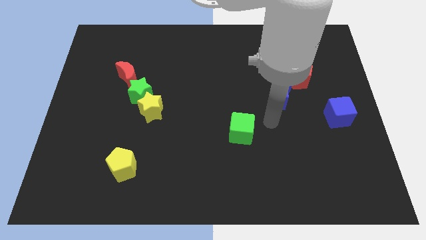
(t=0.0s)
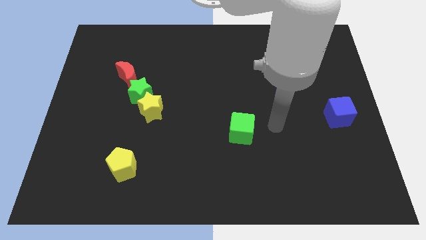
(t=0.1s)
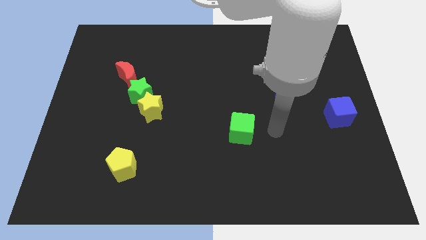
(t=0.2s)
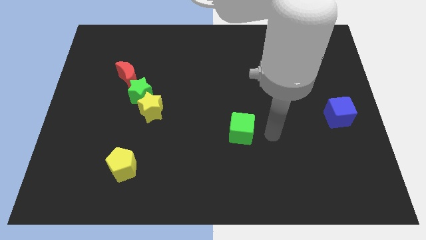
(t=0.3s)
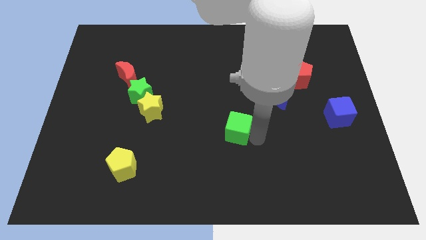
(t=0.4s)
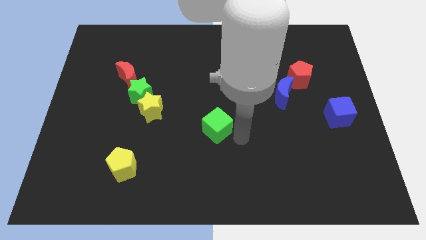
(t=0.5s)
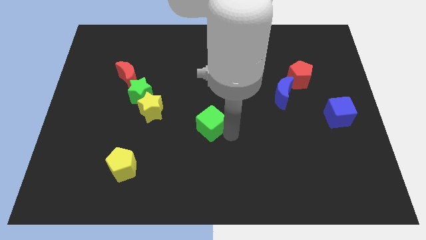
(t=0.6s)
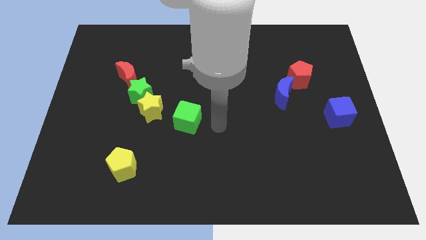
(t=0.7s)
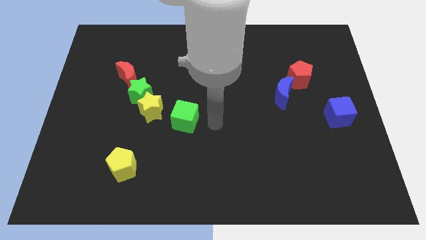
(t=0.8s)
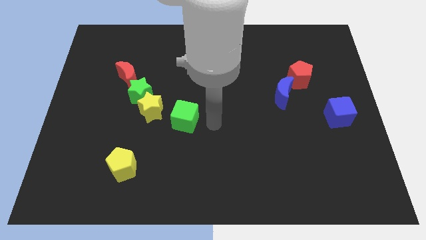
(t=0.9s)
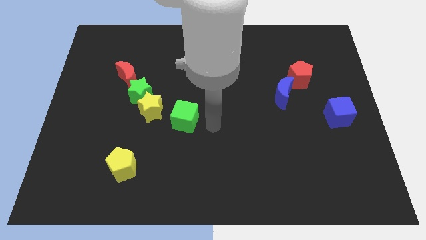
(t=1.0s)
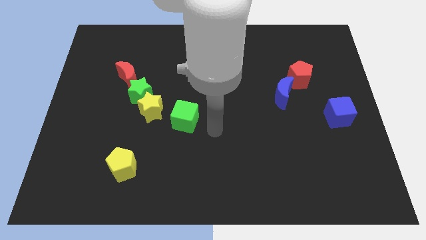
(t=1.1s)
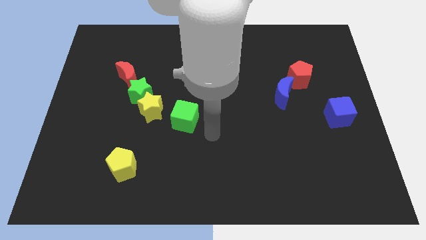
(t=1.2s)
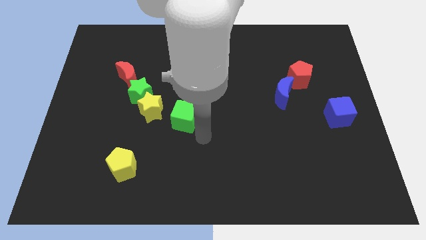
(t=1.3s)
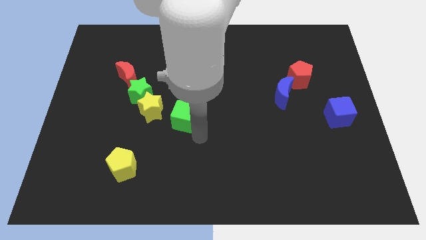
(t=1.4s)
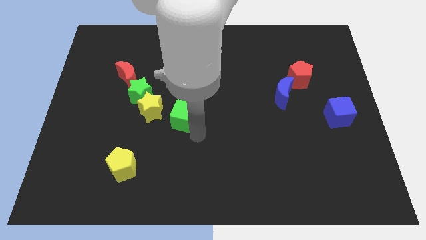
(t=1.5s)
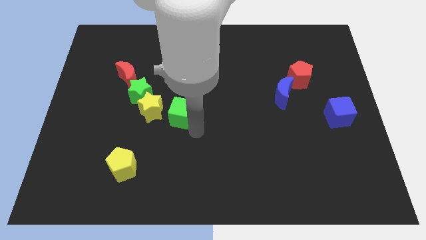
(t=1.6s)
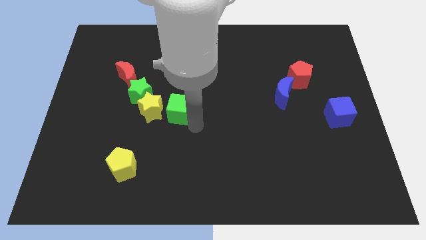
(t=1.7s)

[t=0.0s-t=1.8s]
move the green cube towards the yellow star

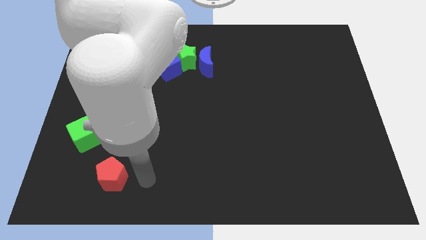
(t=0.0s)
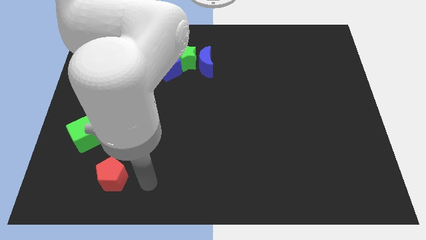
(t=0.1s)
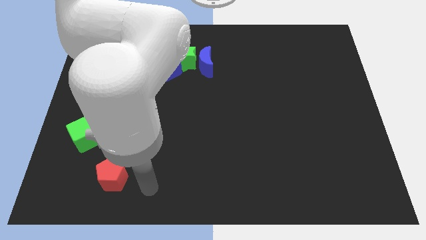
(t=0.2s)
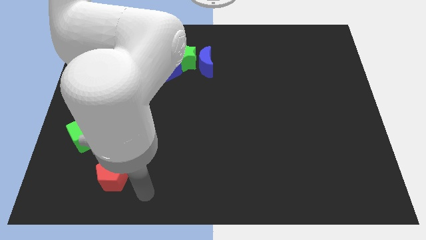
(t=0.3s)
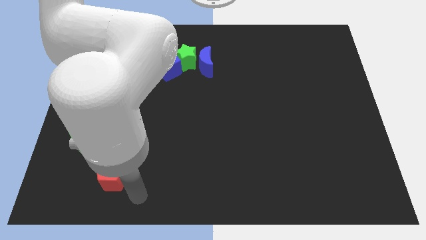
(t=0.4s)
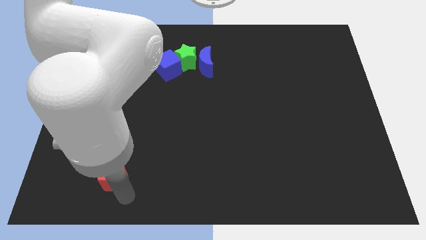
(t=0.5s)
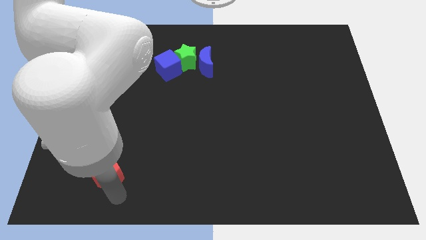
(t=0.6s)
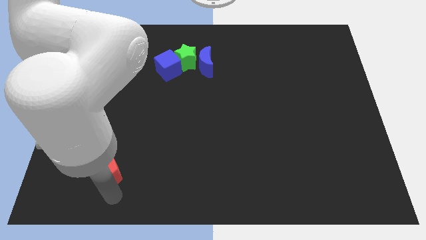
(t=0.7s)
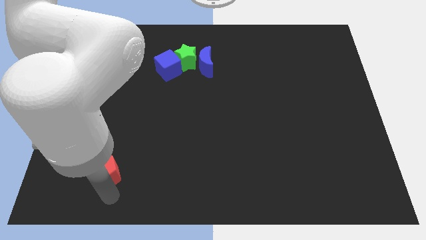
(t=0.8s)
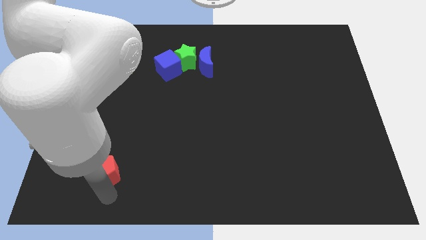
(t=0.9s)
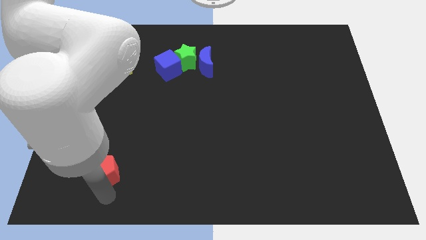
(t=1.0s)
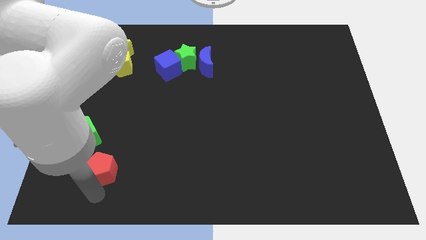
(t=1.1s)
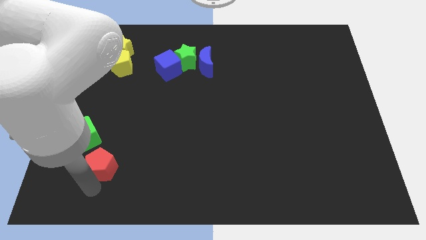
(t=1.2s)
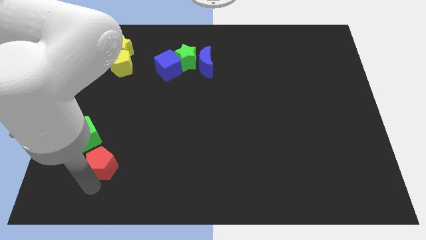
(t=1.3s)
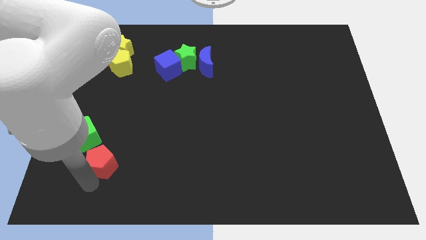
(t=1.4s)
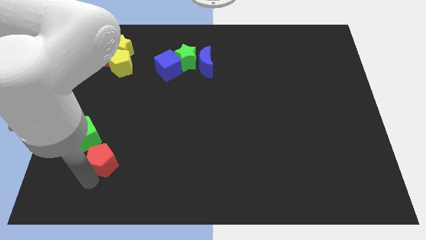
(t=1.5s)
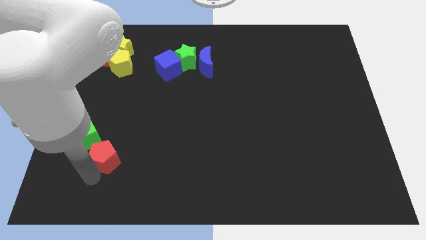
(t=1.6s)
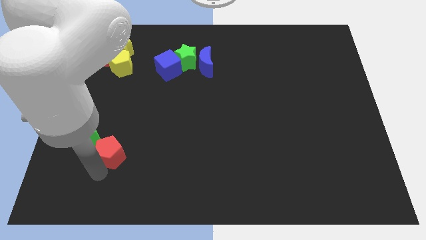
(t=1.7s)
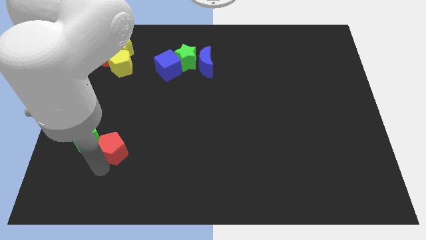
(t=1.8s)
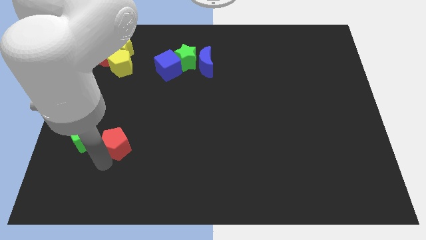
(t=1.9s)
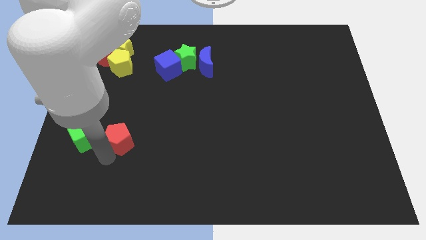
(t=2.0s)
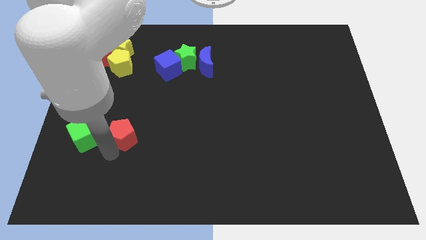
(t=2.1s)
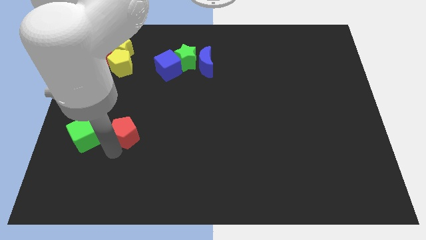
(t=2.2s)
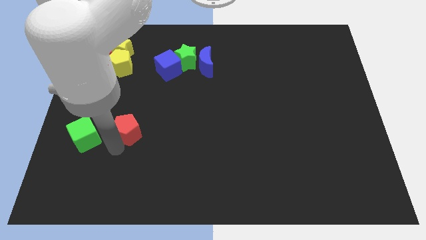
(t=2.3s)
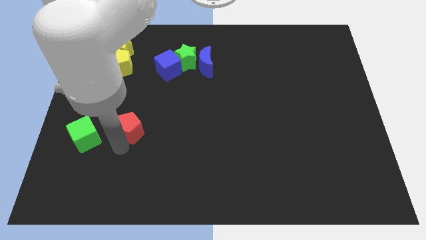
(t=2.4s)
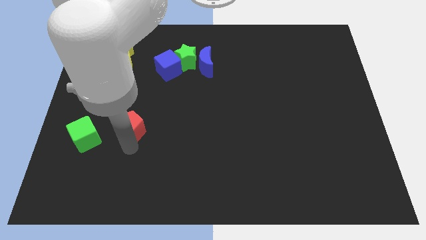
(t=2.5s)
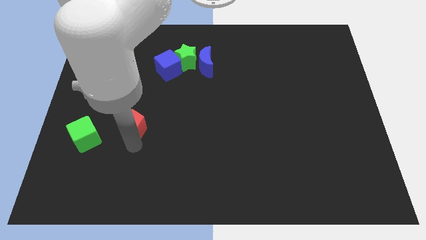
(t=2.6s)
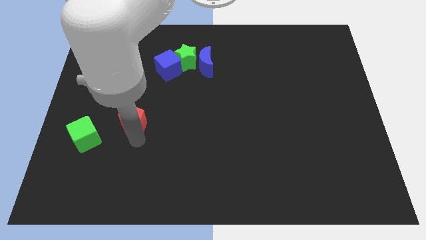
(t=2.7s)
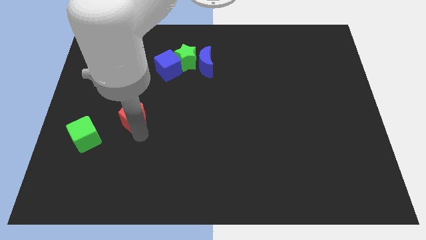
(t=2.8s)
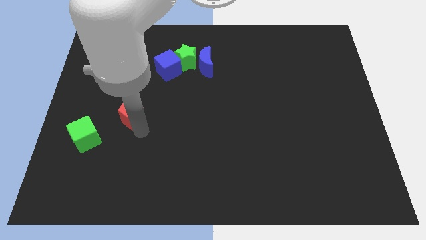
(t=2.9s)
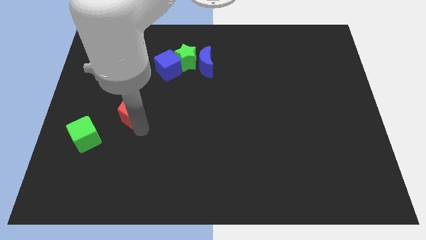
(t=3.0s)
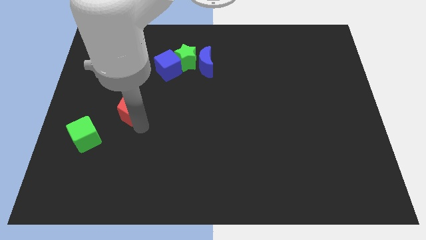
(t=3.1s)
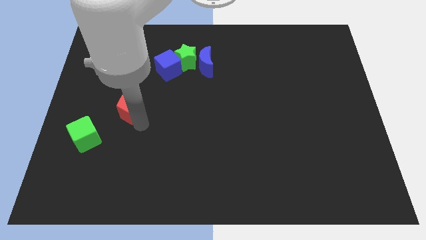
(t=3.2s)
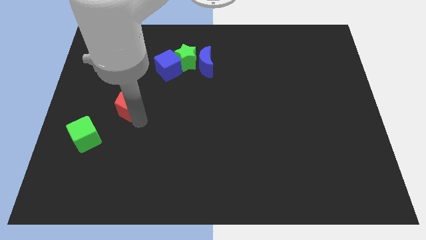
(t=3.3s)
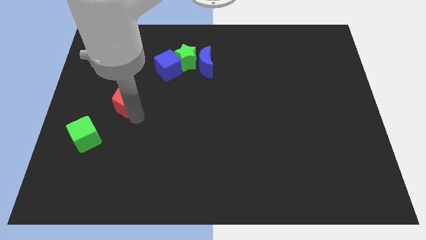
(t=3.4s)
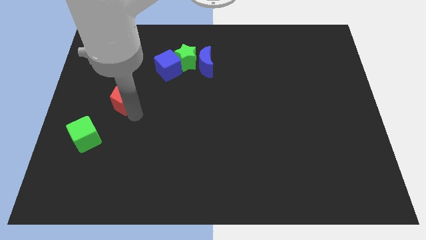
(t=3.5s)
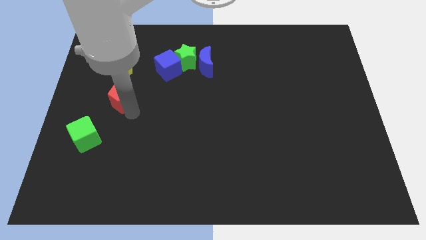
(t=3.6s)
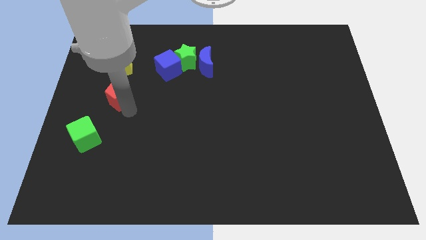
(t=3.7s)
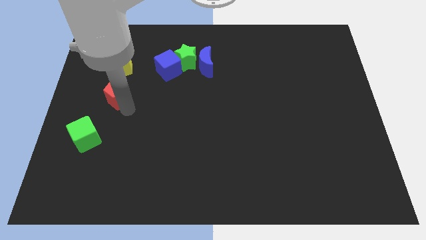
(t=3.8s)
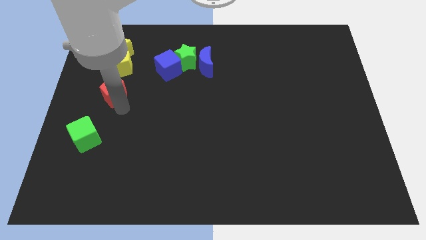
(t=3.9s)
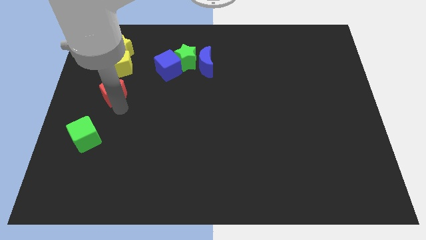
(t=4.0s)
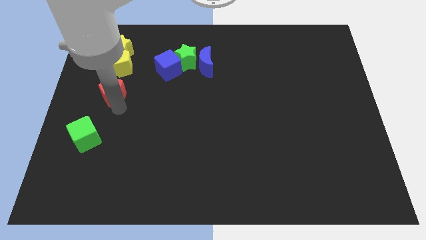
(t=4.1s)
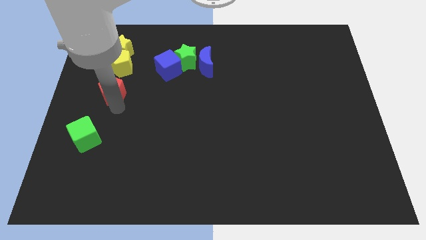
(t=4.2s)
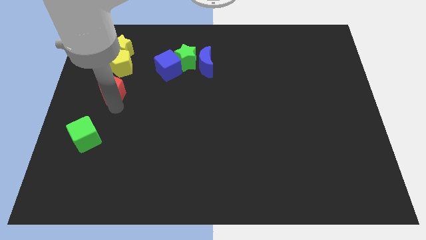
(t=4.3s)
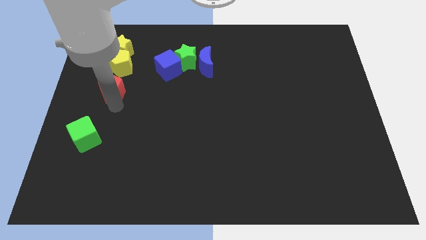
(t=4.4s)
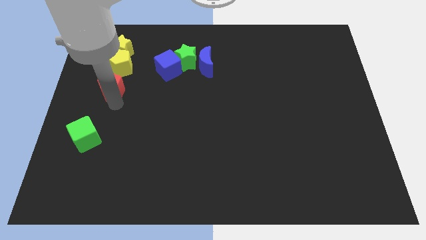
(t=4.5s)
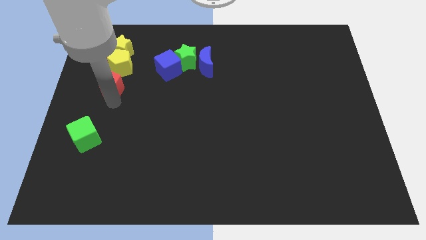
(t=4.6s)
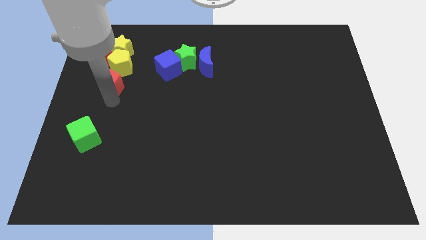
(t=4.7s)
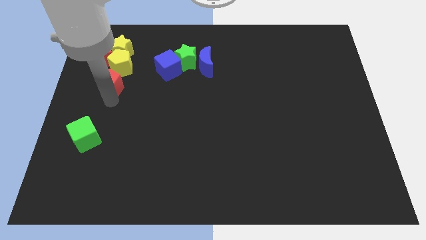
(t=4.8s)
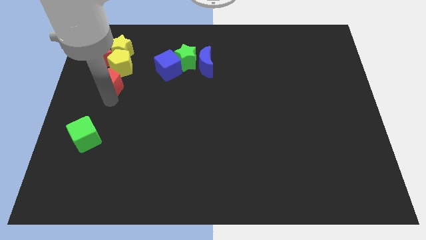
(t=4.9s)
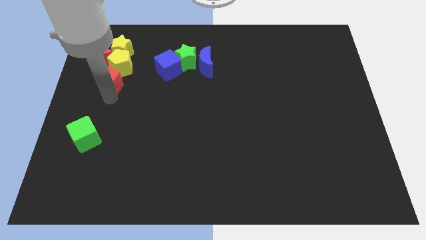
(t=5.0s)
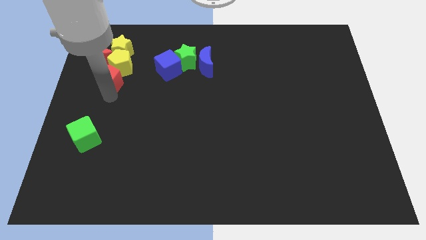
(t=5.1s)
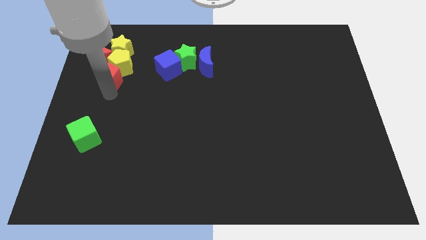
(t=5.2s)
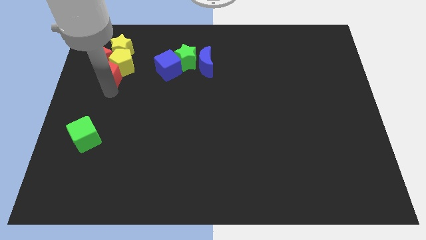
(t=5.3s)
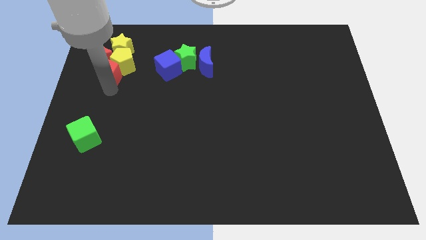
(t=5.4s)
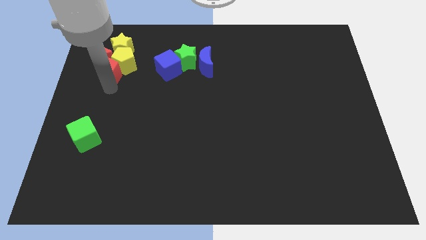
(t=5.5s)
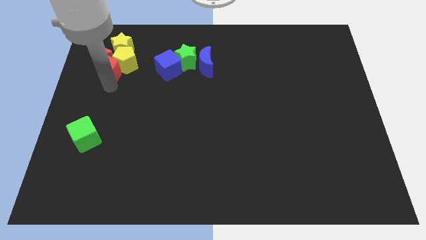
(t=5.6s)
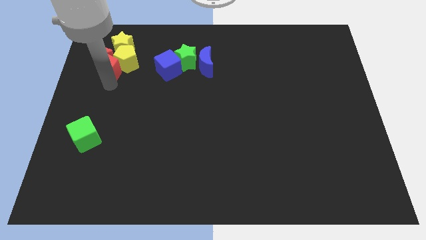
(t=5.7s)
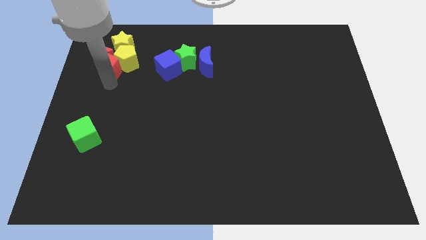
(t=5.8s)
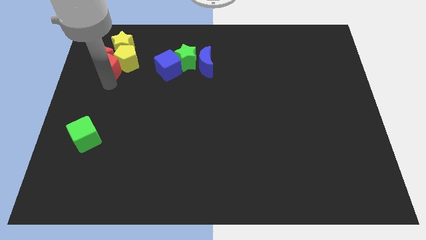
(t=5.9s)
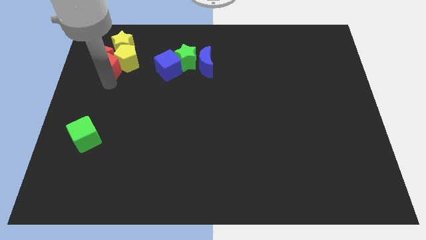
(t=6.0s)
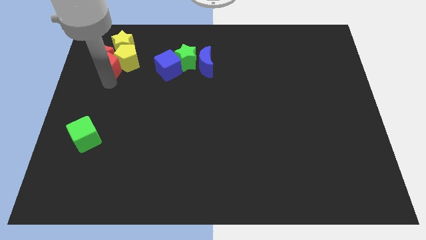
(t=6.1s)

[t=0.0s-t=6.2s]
push the red pentagon into group of blocks

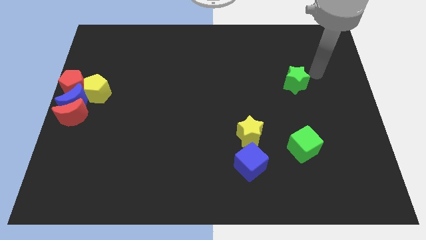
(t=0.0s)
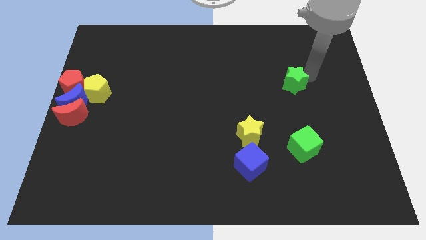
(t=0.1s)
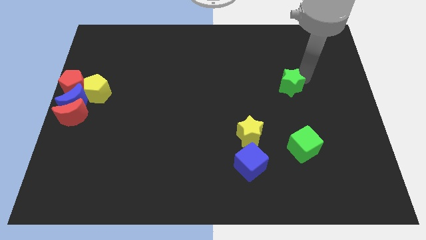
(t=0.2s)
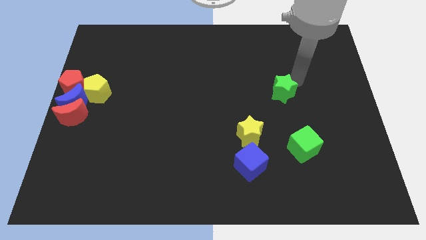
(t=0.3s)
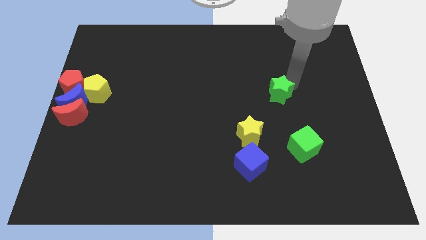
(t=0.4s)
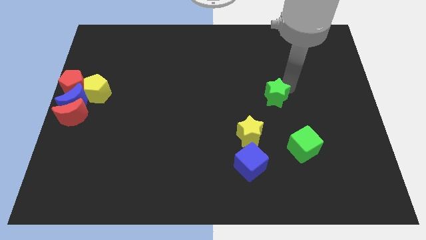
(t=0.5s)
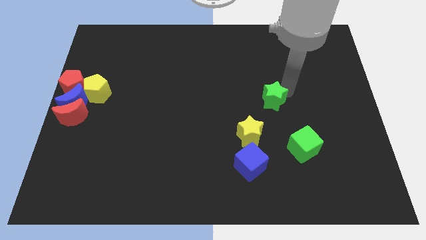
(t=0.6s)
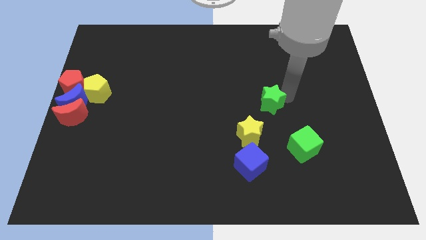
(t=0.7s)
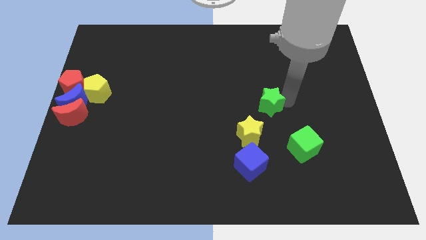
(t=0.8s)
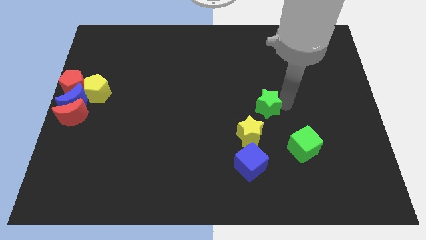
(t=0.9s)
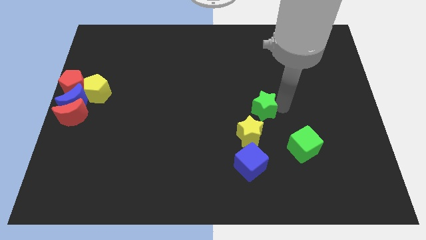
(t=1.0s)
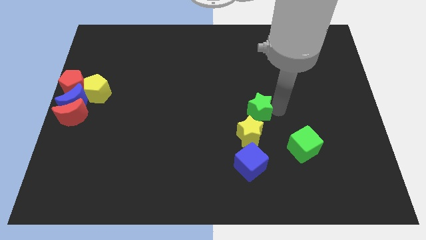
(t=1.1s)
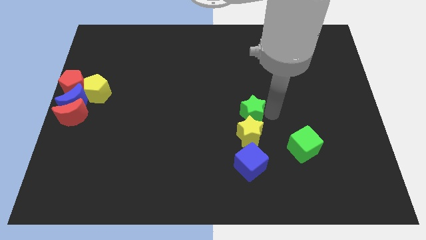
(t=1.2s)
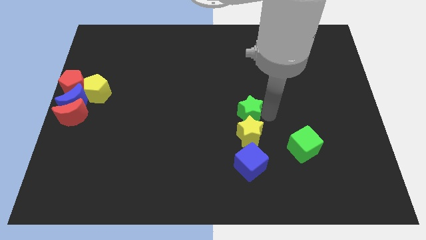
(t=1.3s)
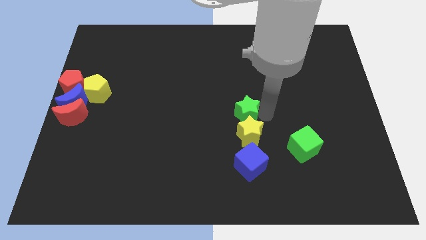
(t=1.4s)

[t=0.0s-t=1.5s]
move the green star to the top of the yellow star
